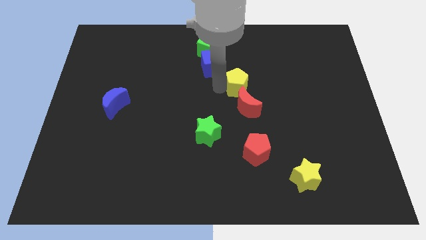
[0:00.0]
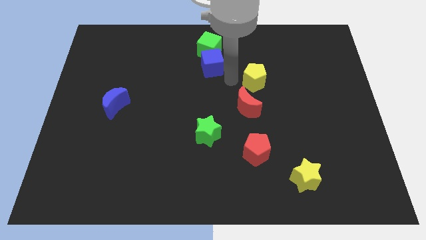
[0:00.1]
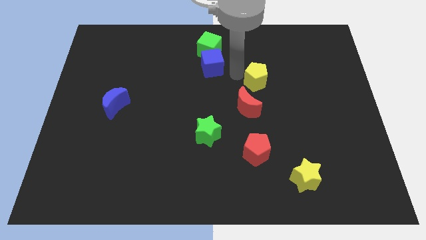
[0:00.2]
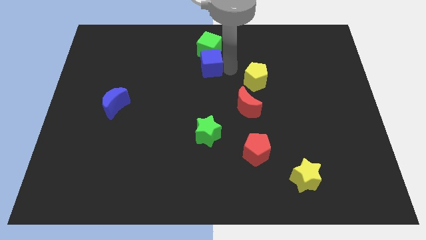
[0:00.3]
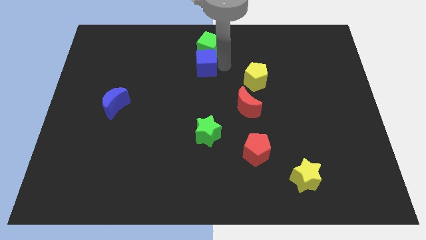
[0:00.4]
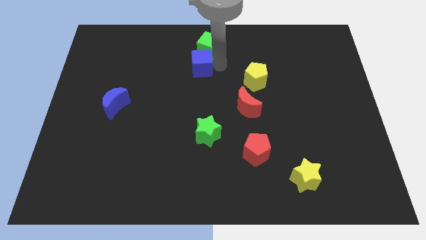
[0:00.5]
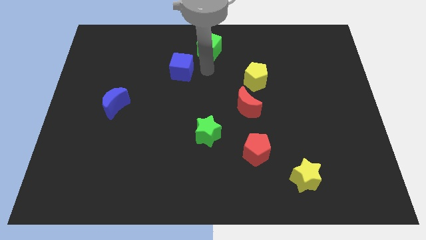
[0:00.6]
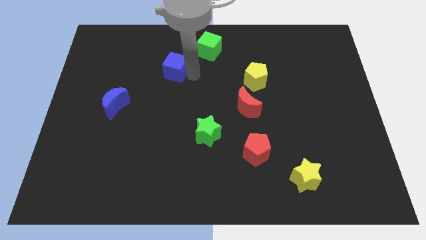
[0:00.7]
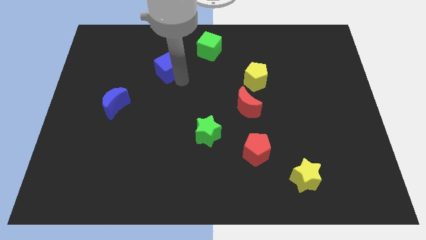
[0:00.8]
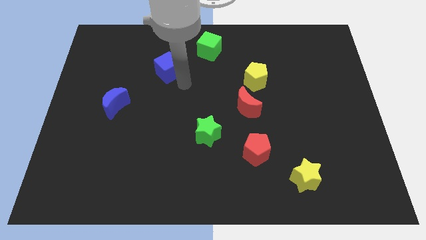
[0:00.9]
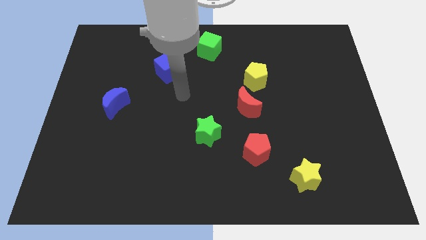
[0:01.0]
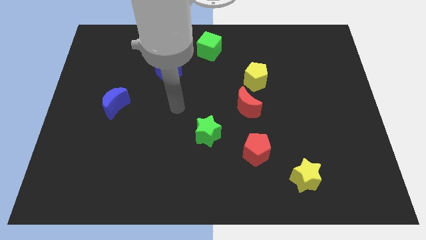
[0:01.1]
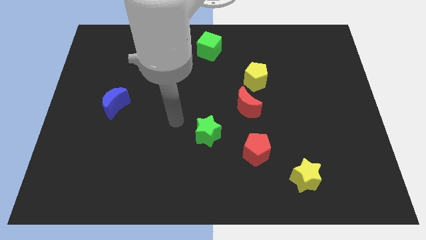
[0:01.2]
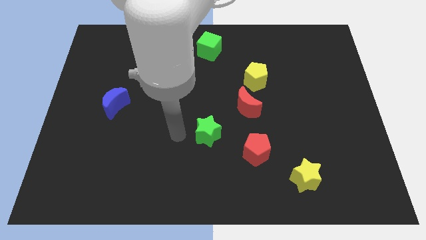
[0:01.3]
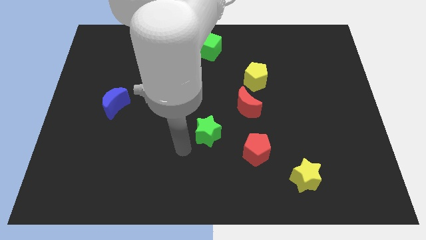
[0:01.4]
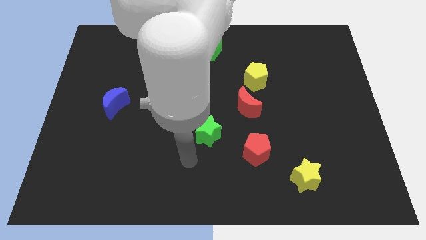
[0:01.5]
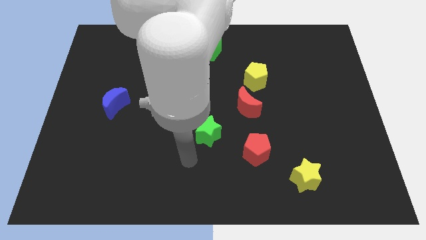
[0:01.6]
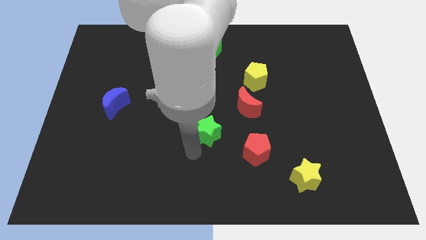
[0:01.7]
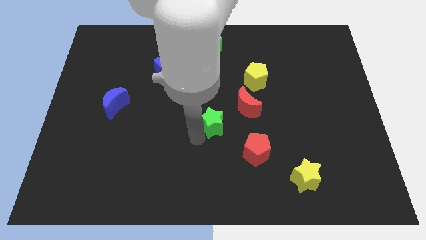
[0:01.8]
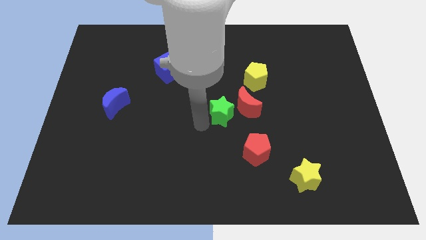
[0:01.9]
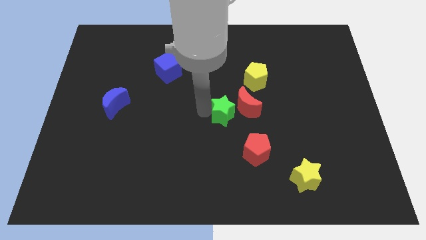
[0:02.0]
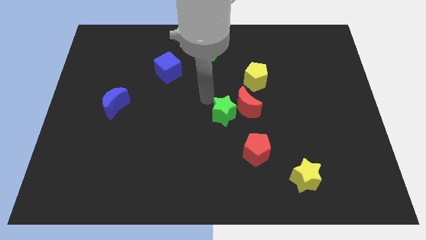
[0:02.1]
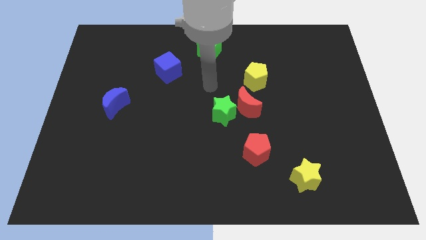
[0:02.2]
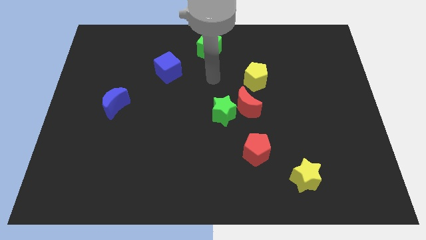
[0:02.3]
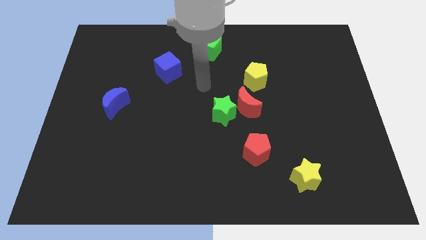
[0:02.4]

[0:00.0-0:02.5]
separate the blue cube and green cube

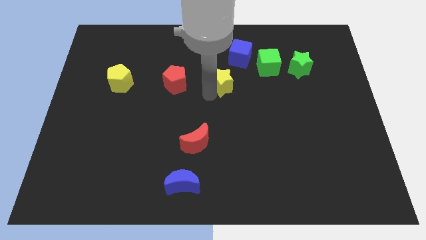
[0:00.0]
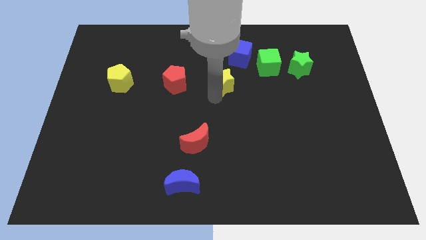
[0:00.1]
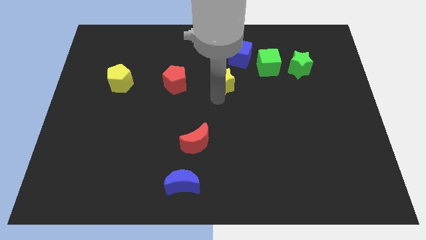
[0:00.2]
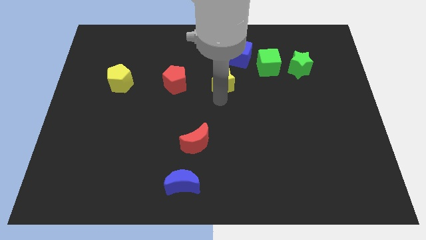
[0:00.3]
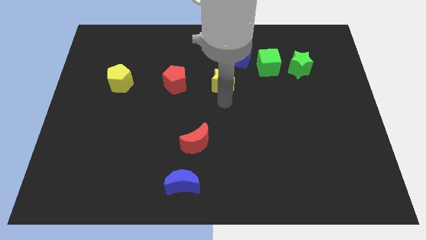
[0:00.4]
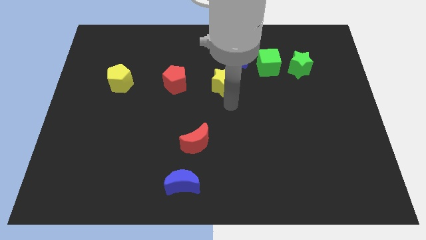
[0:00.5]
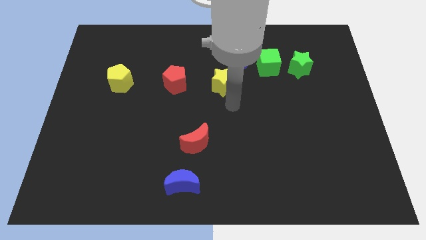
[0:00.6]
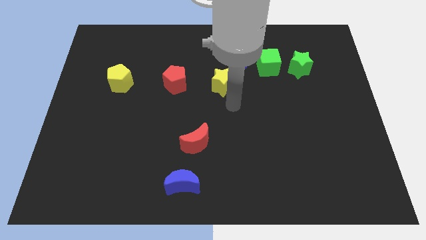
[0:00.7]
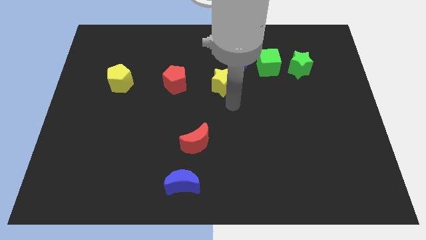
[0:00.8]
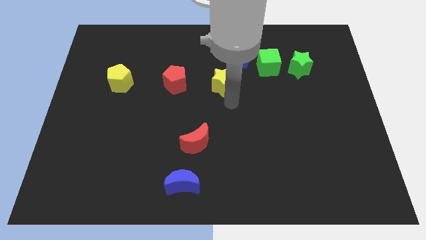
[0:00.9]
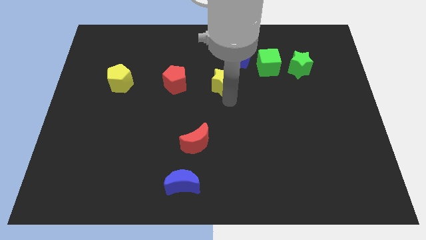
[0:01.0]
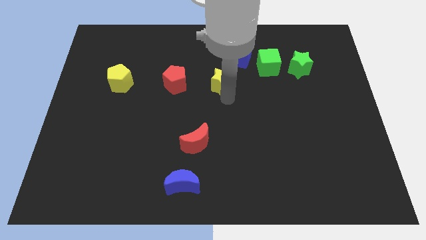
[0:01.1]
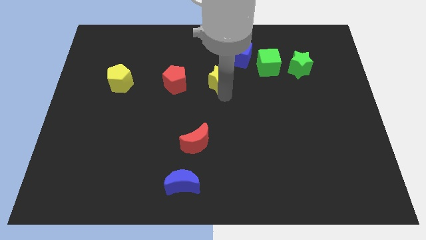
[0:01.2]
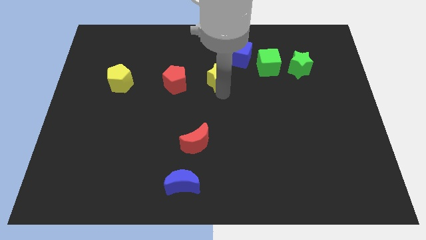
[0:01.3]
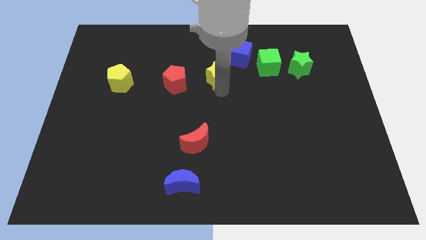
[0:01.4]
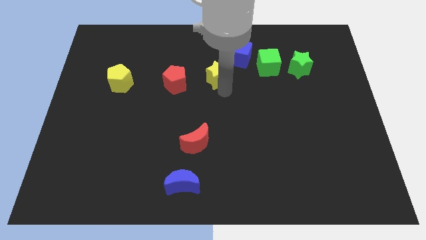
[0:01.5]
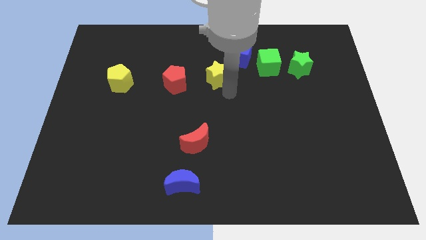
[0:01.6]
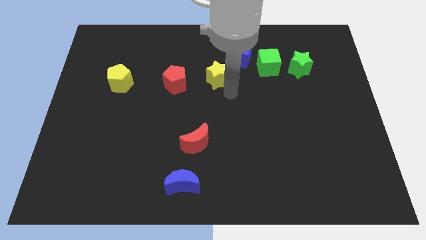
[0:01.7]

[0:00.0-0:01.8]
adjust the yellow star to the right side of the red pentagon

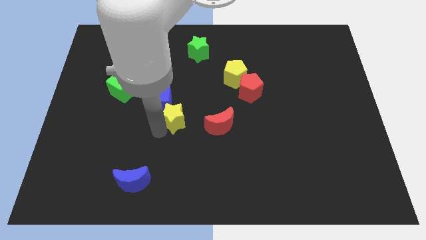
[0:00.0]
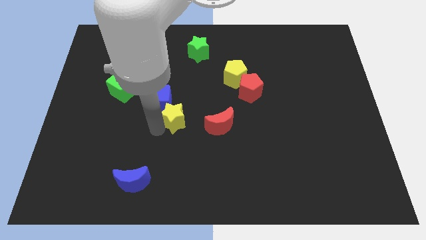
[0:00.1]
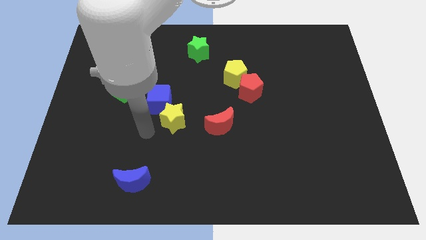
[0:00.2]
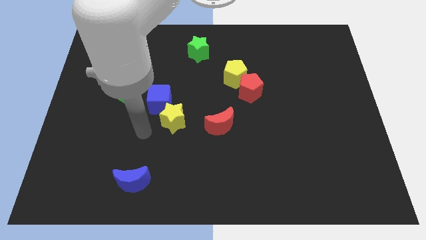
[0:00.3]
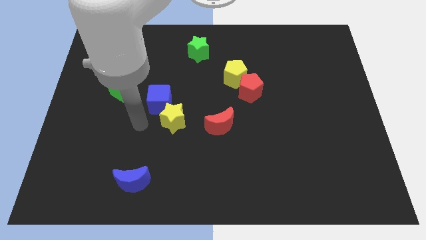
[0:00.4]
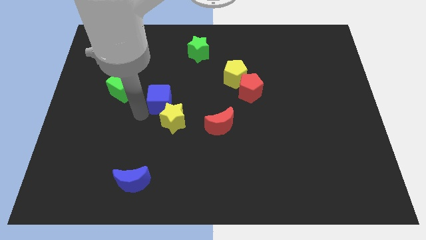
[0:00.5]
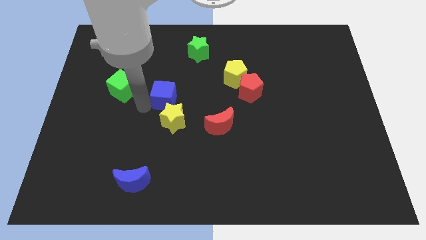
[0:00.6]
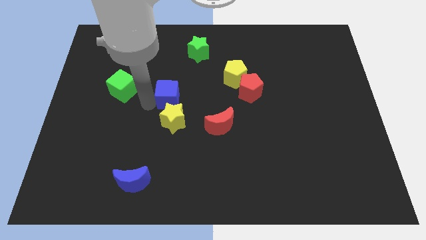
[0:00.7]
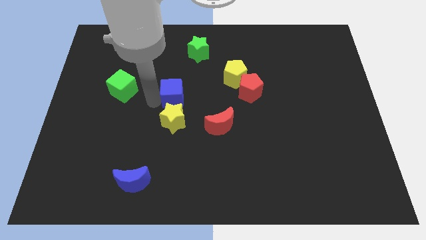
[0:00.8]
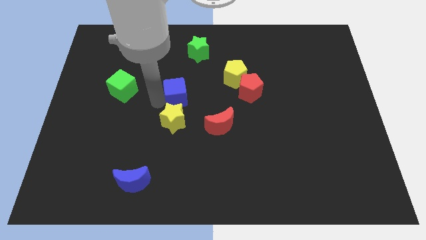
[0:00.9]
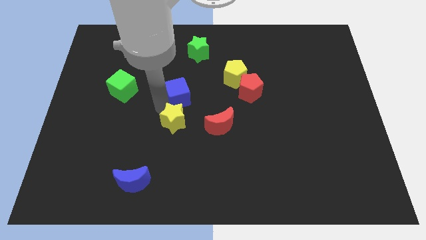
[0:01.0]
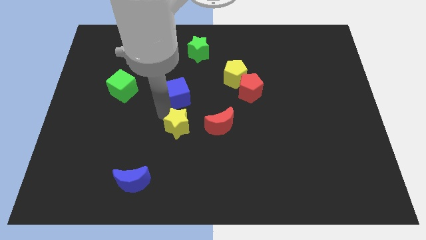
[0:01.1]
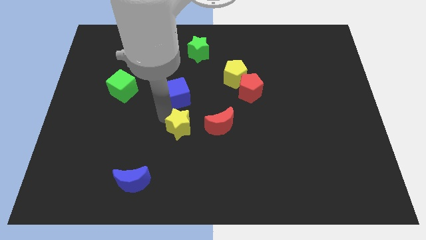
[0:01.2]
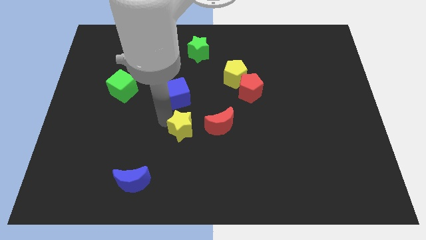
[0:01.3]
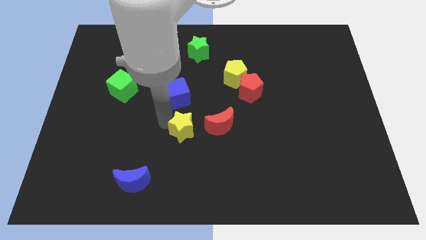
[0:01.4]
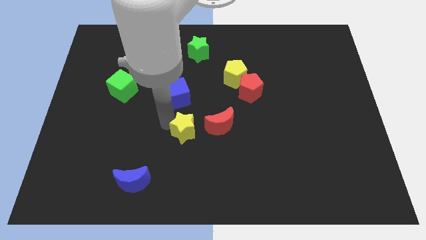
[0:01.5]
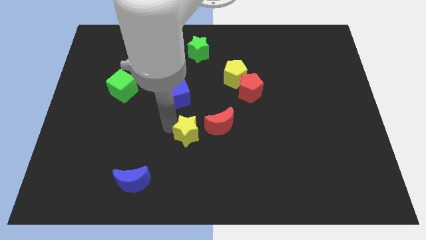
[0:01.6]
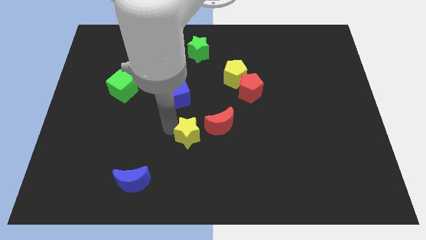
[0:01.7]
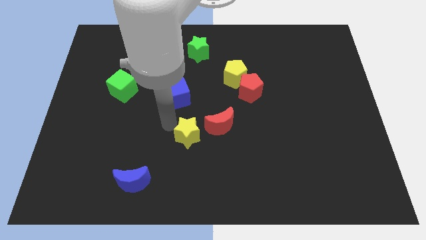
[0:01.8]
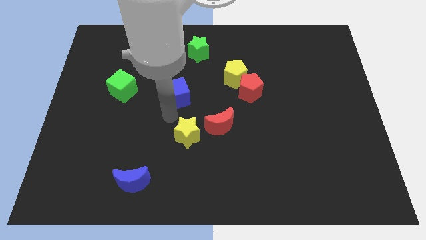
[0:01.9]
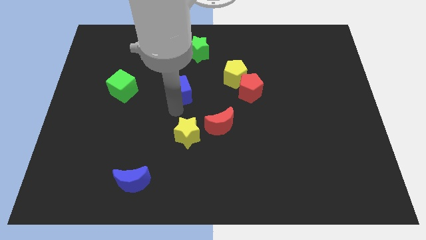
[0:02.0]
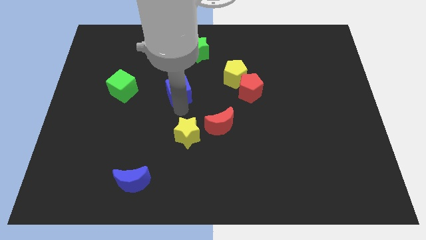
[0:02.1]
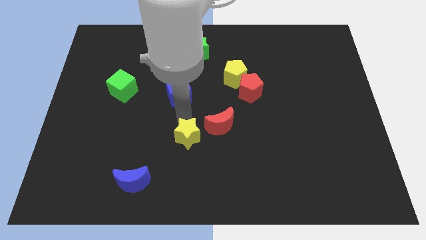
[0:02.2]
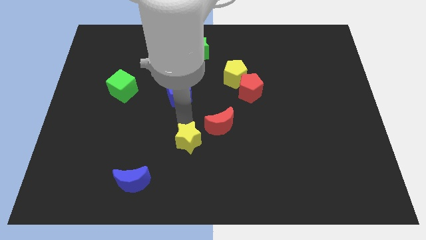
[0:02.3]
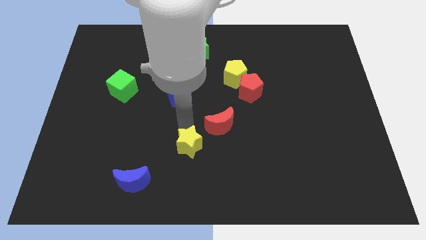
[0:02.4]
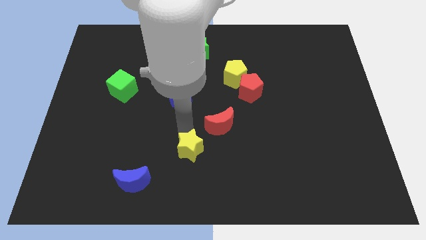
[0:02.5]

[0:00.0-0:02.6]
separate the blue cube and yellow star

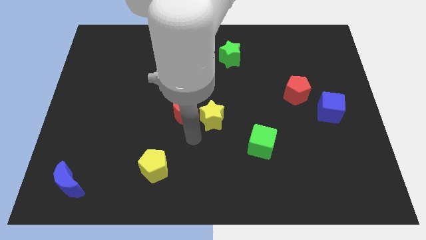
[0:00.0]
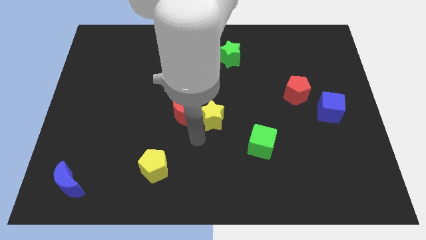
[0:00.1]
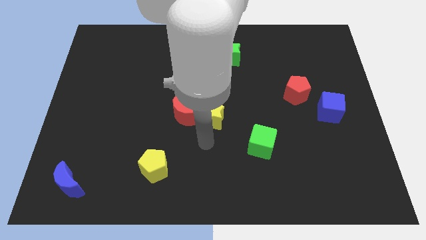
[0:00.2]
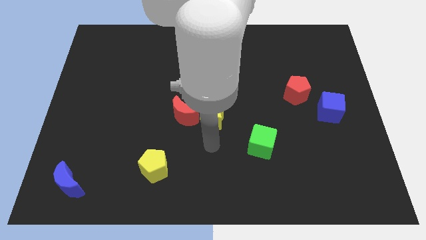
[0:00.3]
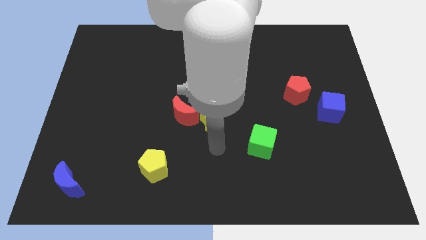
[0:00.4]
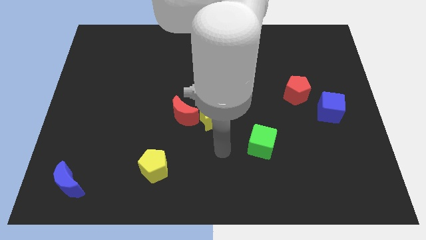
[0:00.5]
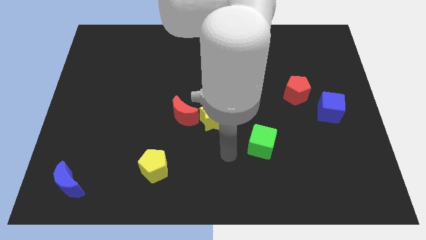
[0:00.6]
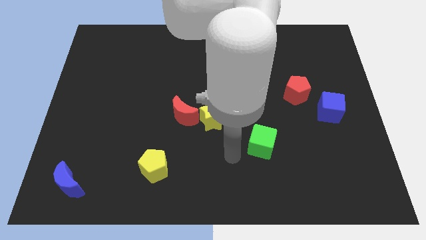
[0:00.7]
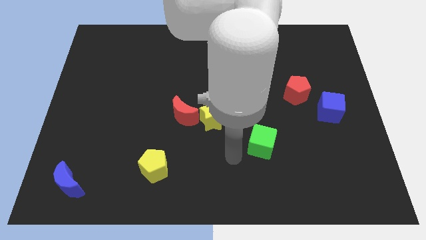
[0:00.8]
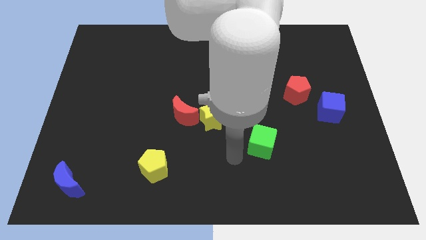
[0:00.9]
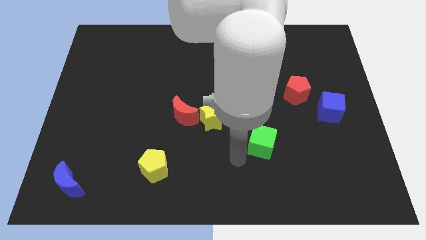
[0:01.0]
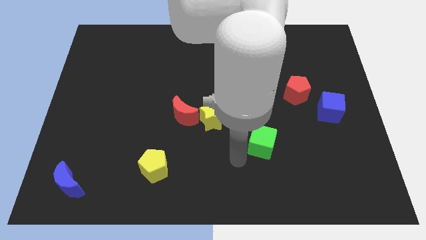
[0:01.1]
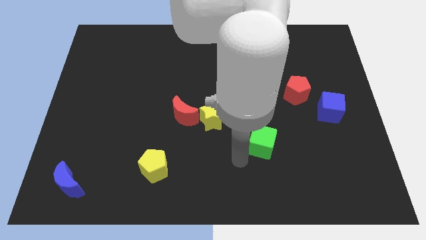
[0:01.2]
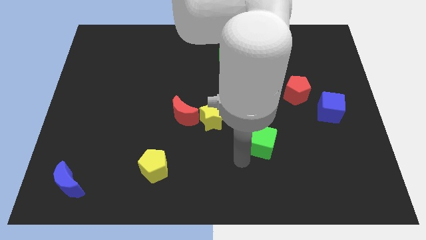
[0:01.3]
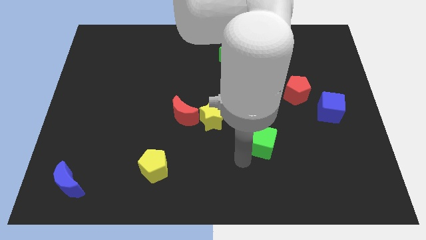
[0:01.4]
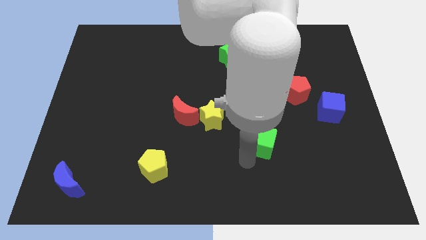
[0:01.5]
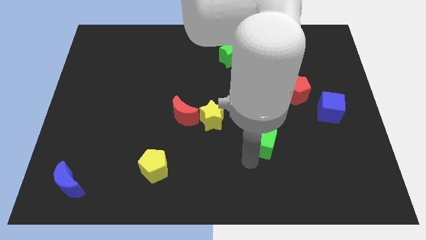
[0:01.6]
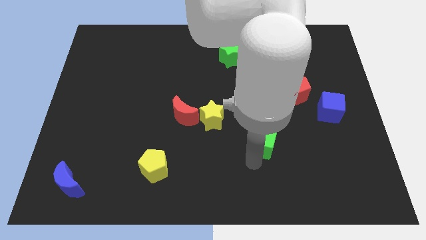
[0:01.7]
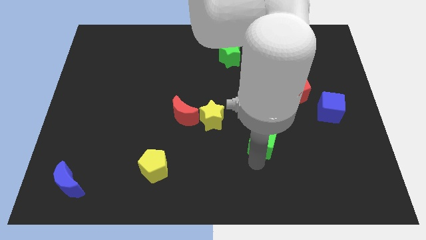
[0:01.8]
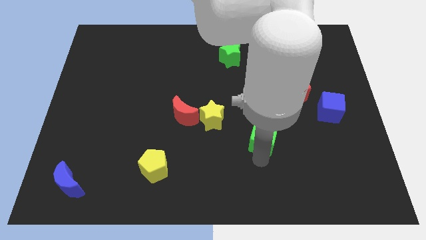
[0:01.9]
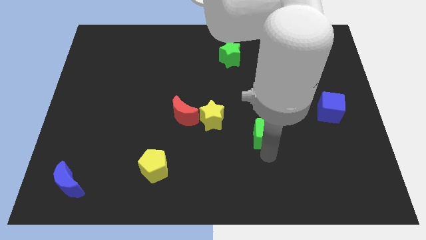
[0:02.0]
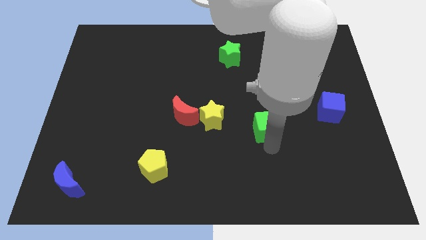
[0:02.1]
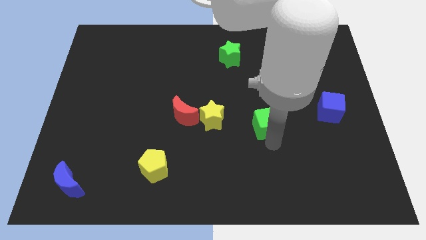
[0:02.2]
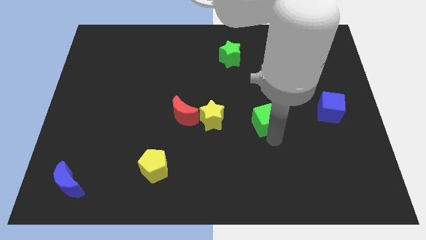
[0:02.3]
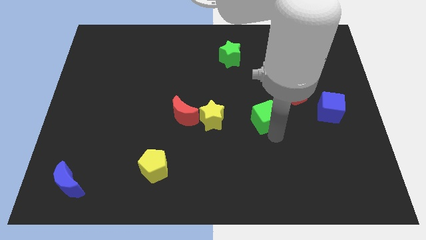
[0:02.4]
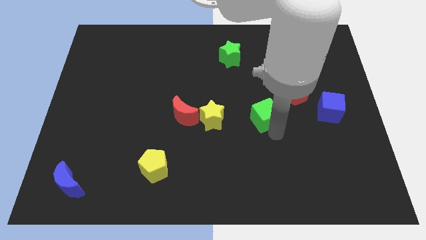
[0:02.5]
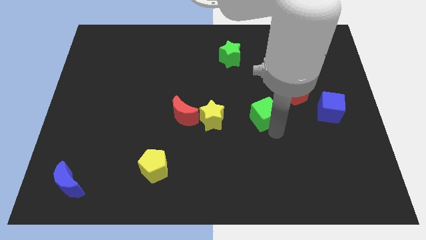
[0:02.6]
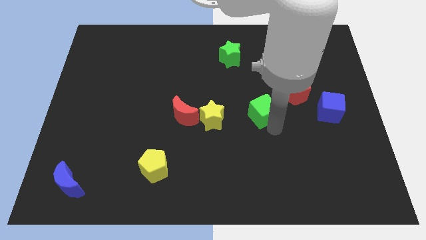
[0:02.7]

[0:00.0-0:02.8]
put the green cube to the right of the yellow star
